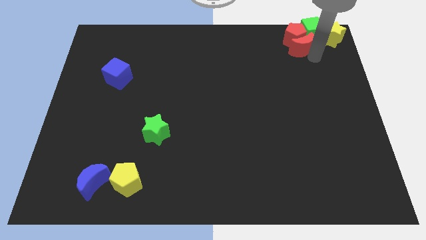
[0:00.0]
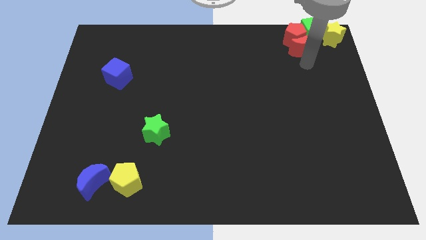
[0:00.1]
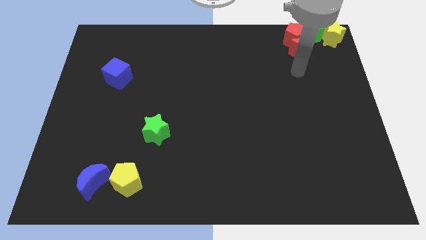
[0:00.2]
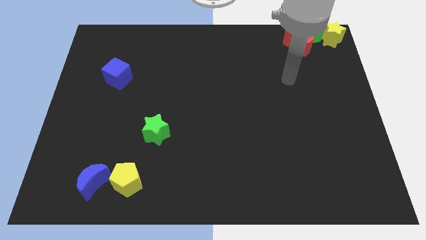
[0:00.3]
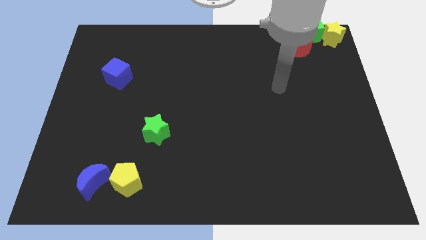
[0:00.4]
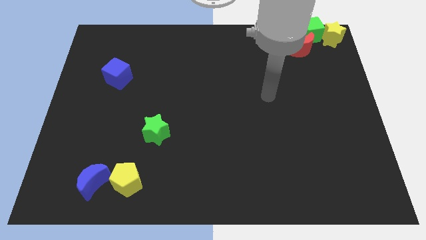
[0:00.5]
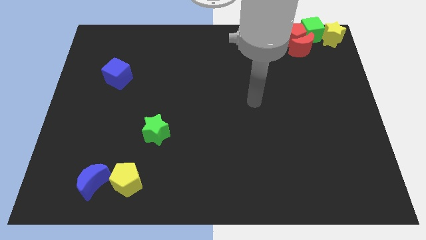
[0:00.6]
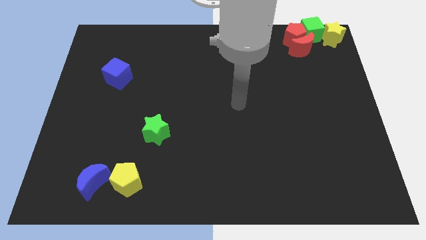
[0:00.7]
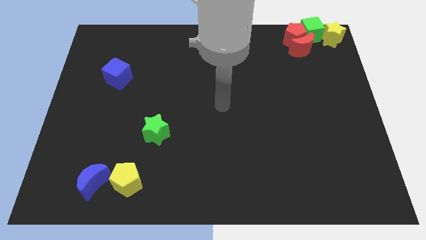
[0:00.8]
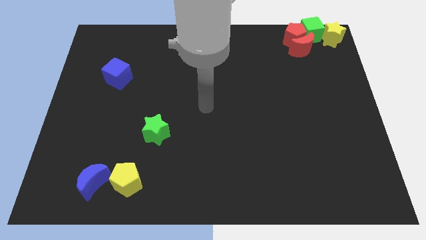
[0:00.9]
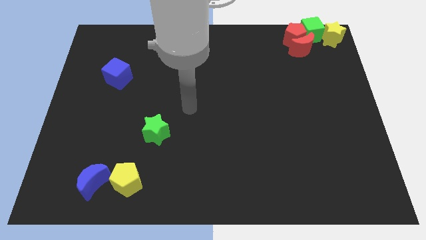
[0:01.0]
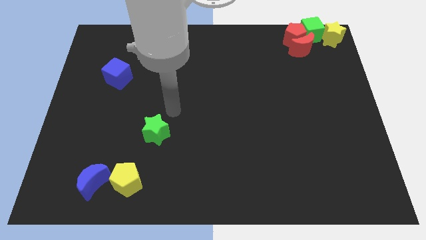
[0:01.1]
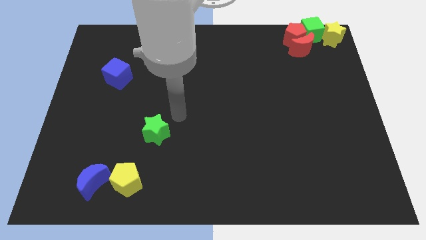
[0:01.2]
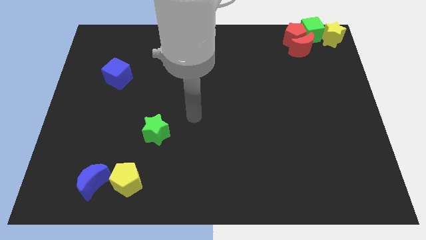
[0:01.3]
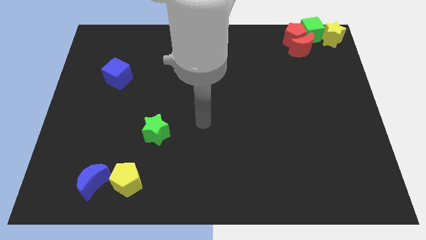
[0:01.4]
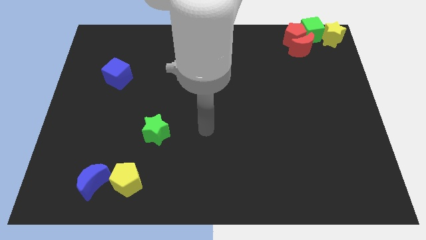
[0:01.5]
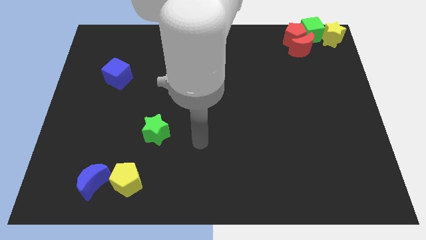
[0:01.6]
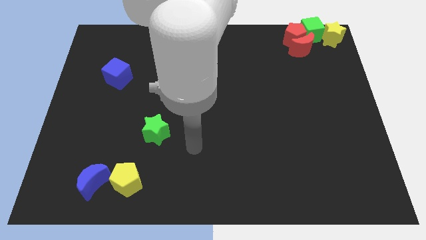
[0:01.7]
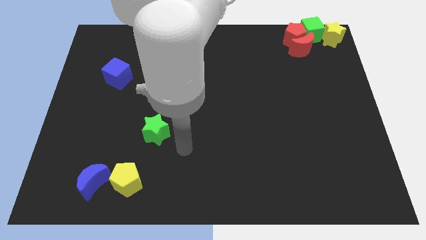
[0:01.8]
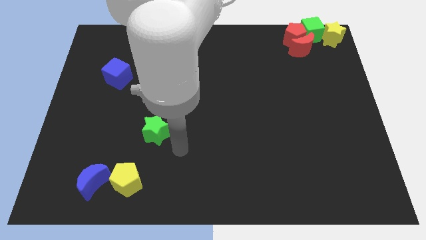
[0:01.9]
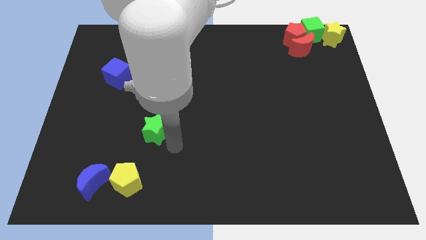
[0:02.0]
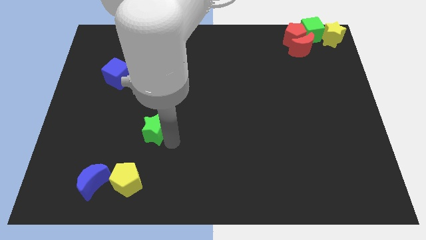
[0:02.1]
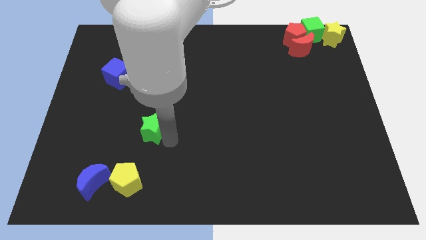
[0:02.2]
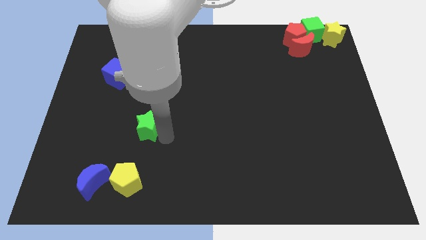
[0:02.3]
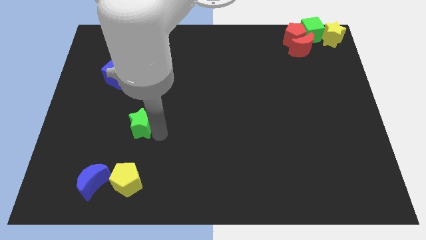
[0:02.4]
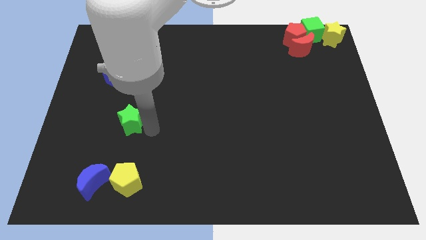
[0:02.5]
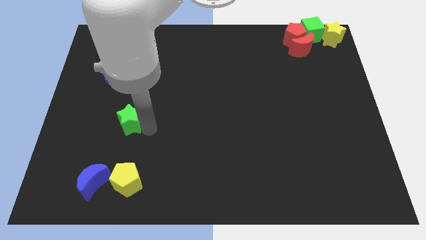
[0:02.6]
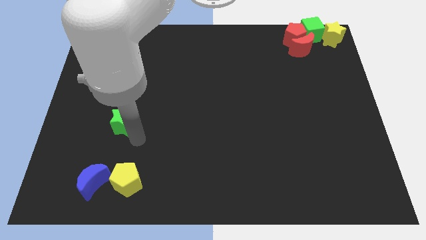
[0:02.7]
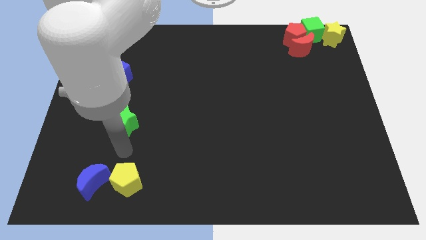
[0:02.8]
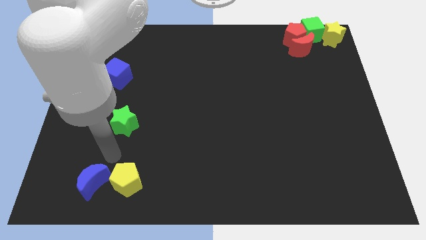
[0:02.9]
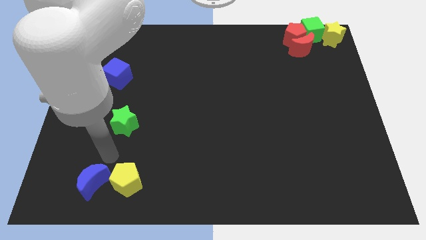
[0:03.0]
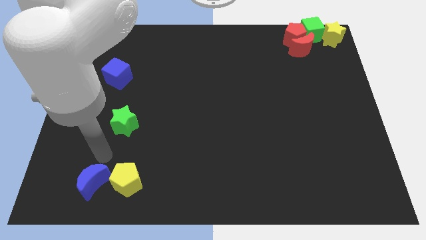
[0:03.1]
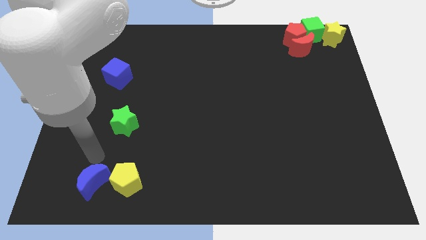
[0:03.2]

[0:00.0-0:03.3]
put the green star above the yellow pentagon

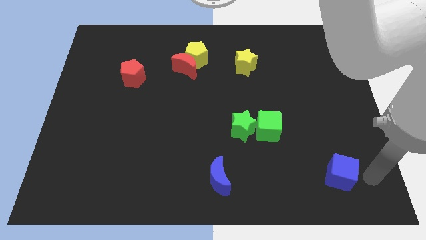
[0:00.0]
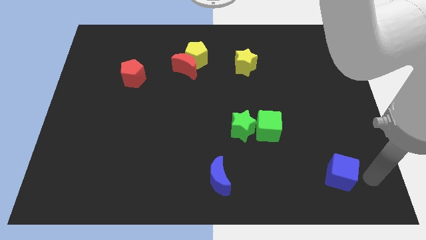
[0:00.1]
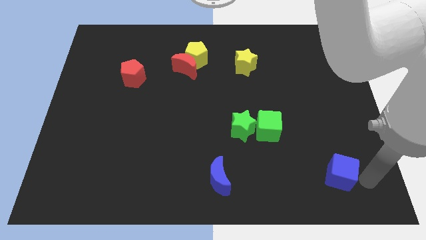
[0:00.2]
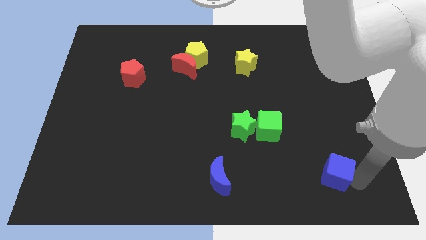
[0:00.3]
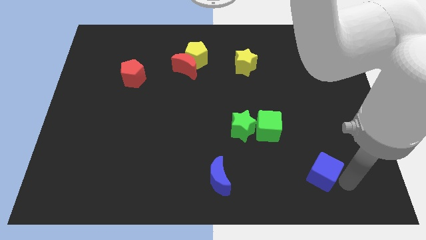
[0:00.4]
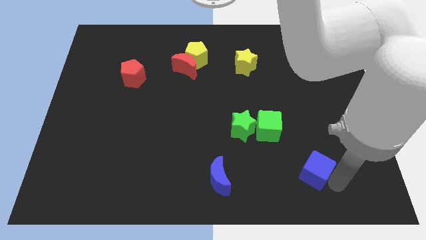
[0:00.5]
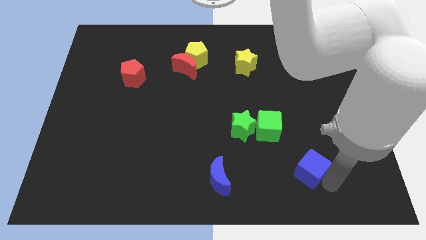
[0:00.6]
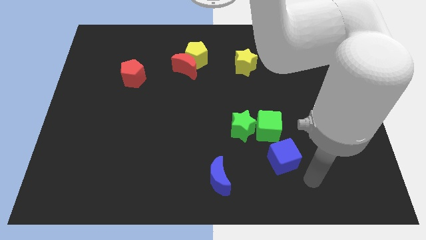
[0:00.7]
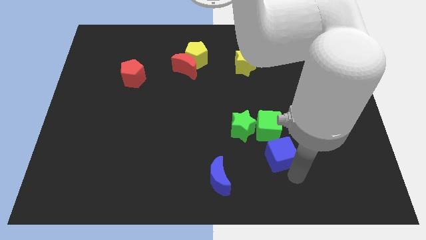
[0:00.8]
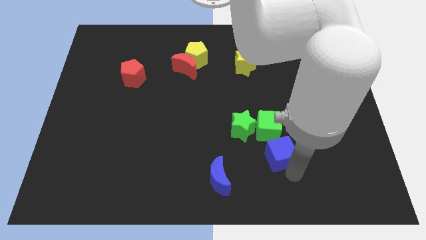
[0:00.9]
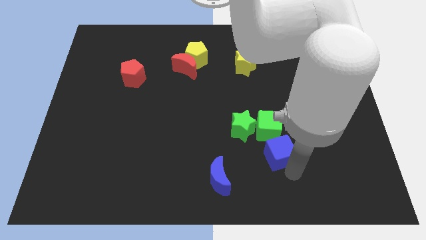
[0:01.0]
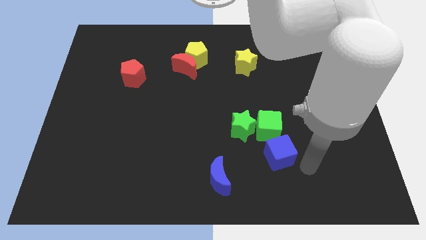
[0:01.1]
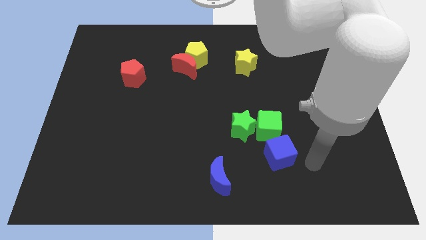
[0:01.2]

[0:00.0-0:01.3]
place blue cube to the bottom of green cube

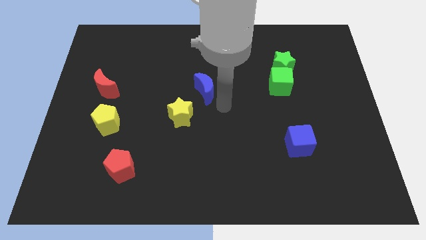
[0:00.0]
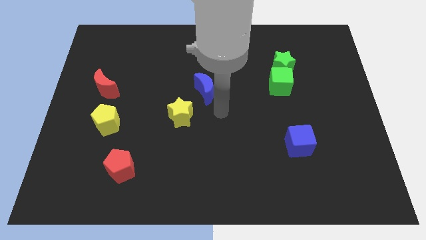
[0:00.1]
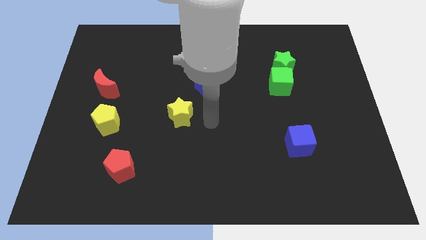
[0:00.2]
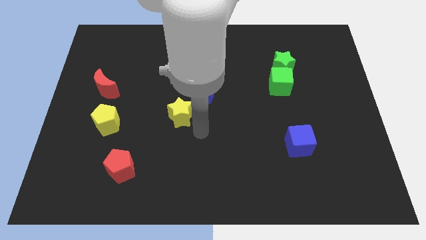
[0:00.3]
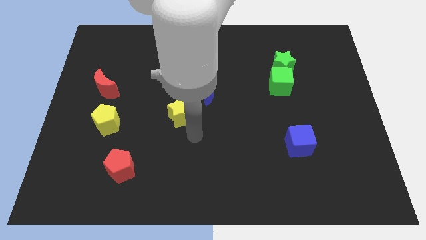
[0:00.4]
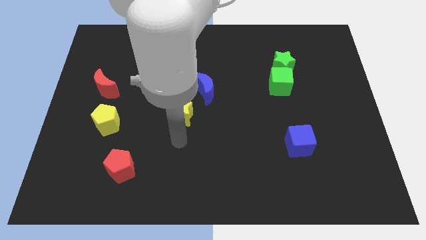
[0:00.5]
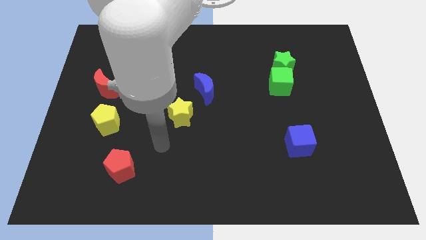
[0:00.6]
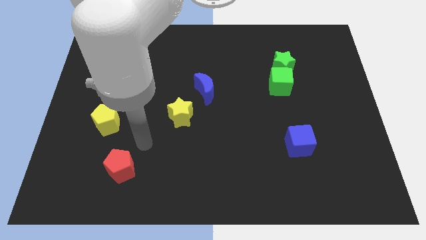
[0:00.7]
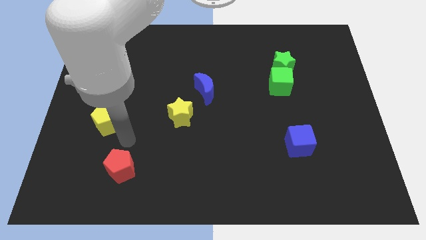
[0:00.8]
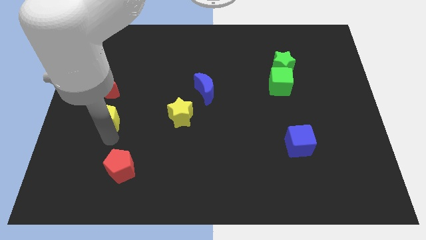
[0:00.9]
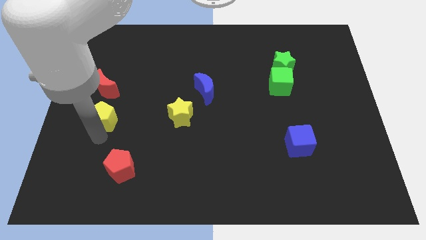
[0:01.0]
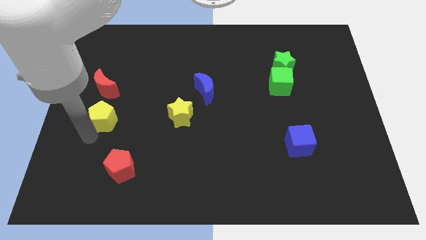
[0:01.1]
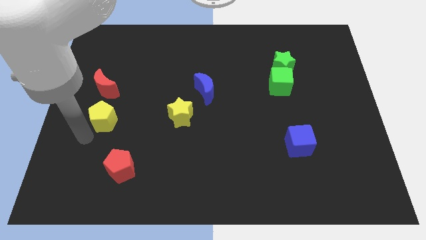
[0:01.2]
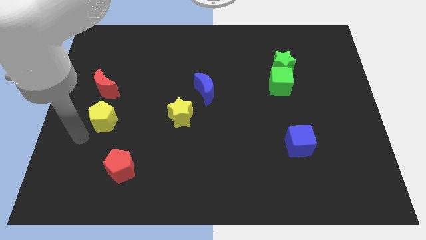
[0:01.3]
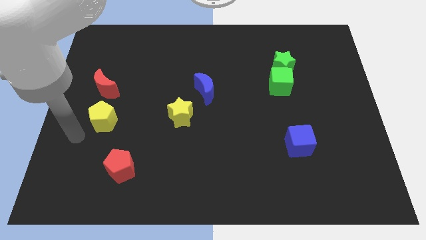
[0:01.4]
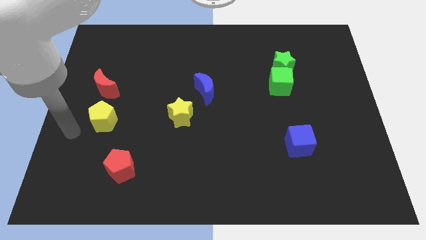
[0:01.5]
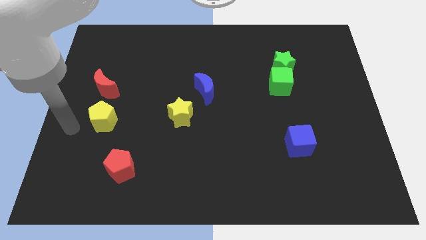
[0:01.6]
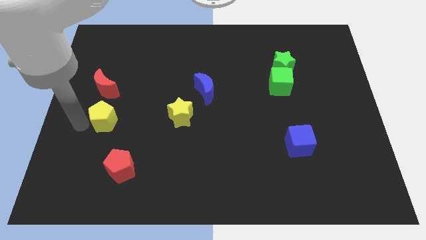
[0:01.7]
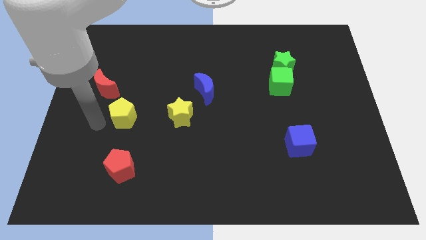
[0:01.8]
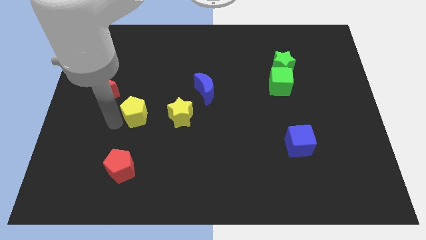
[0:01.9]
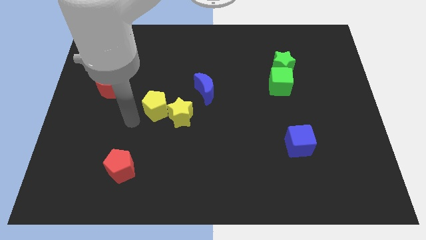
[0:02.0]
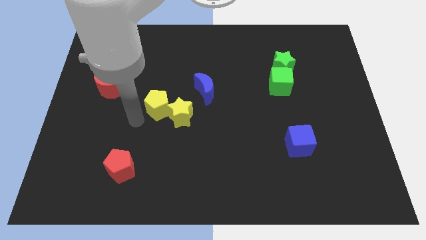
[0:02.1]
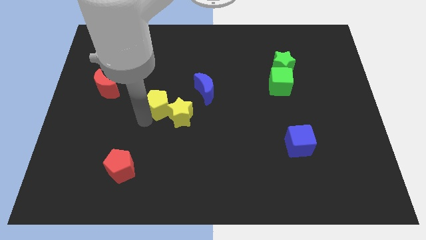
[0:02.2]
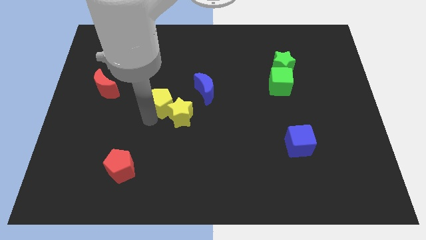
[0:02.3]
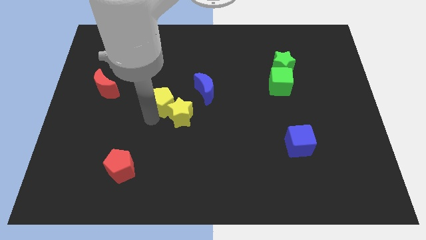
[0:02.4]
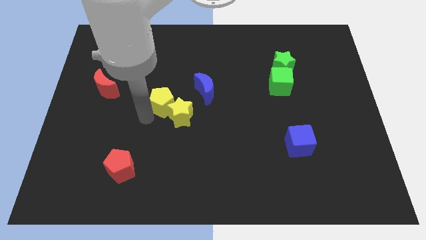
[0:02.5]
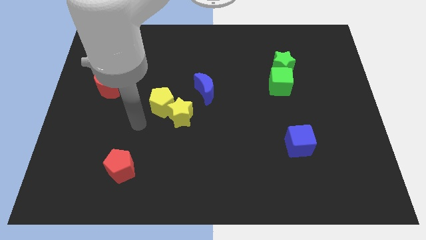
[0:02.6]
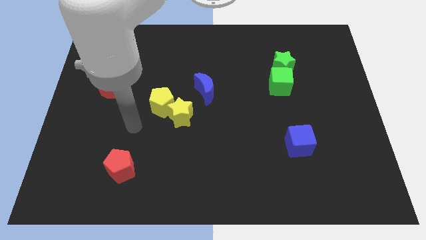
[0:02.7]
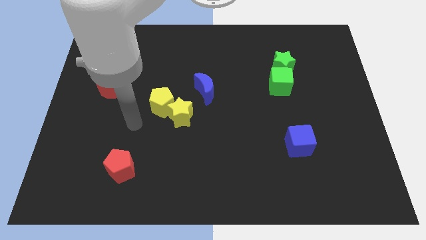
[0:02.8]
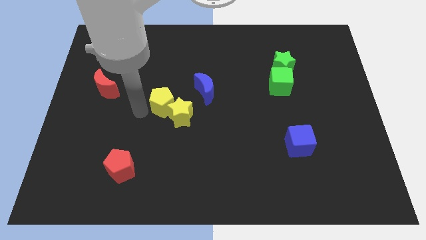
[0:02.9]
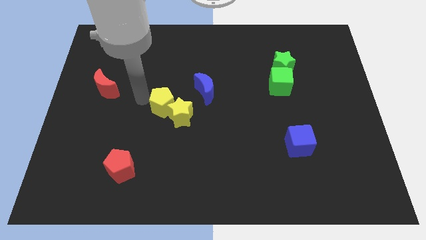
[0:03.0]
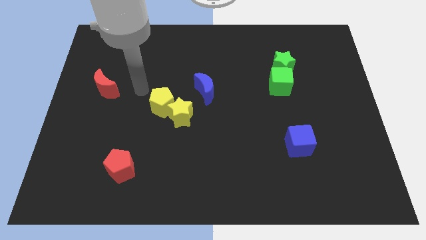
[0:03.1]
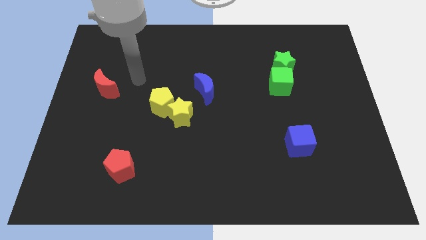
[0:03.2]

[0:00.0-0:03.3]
push the yellow pentagon towards yellow star

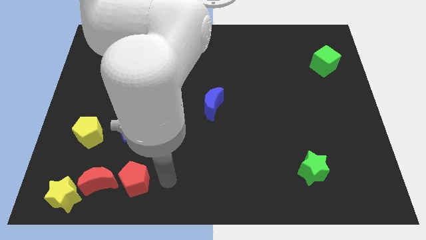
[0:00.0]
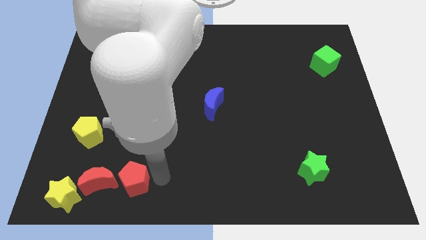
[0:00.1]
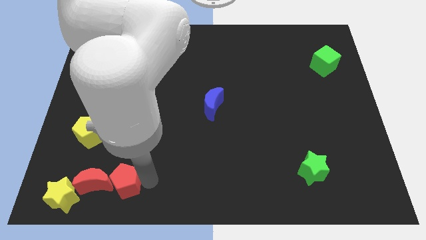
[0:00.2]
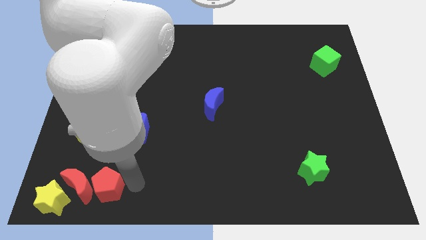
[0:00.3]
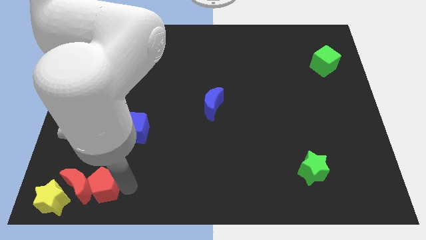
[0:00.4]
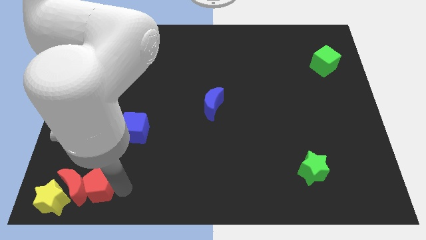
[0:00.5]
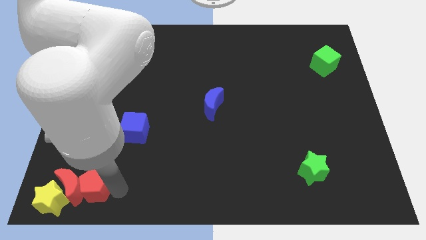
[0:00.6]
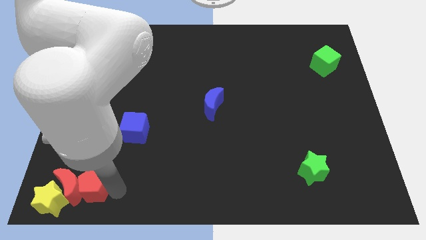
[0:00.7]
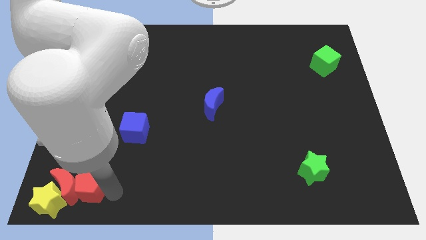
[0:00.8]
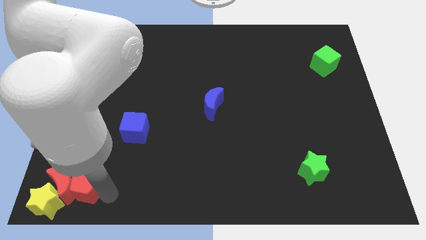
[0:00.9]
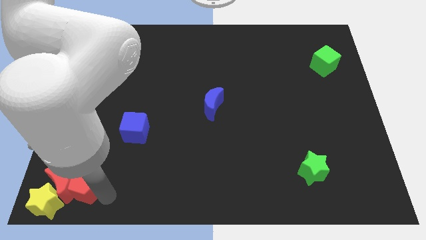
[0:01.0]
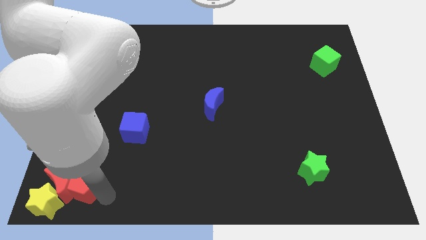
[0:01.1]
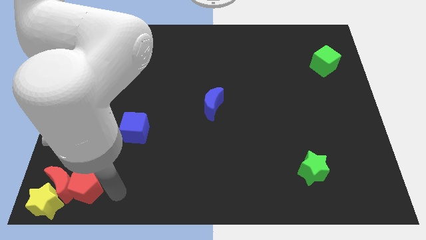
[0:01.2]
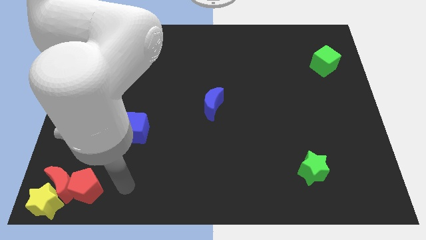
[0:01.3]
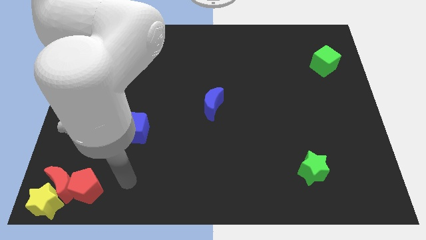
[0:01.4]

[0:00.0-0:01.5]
push the yellow star and red crescent with the red pentagon towards the bottom left of the board
